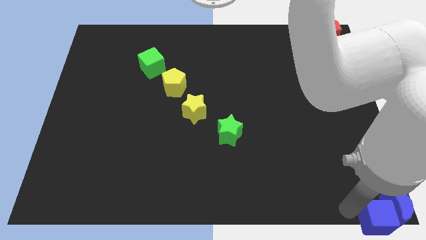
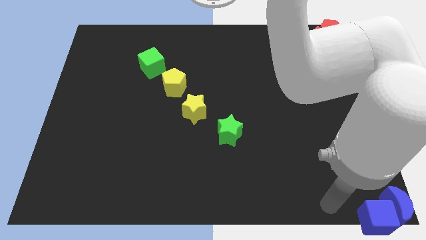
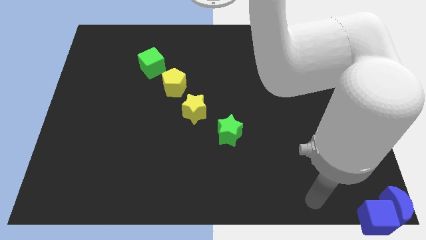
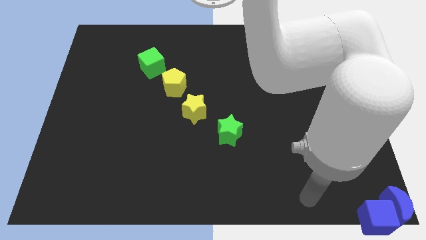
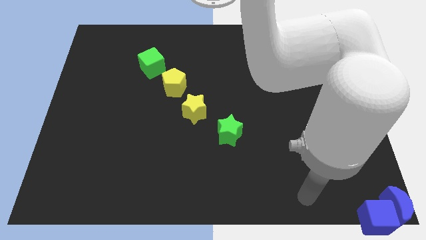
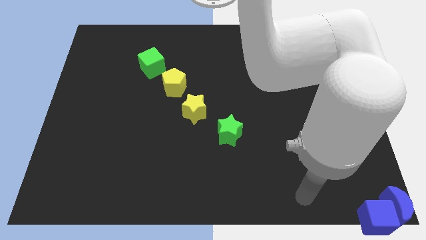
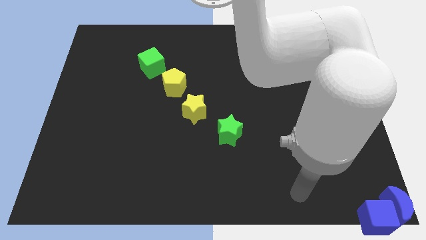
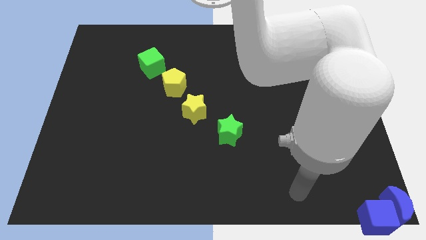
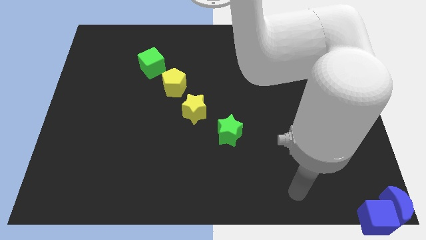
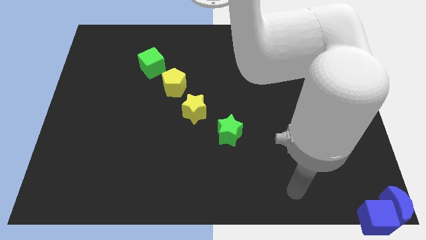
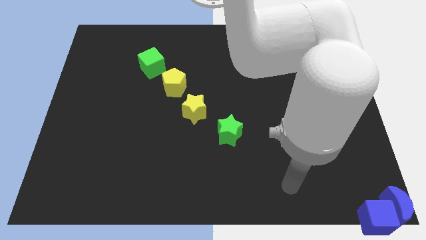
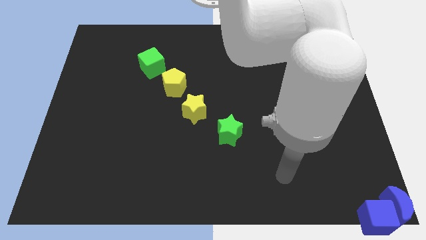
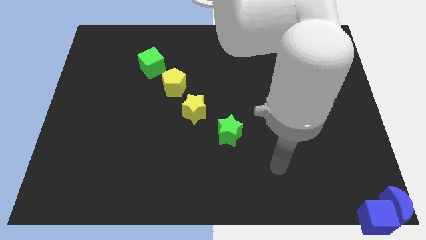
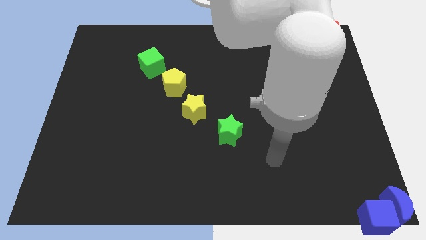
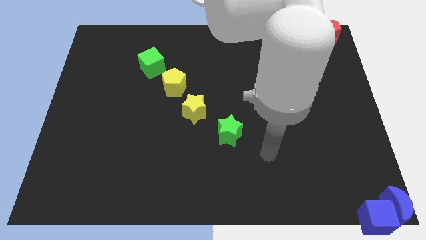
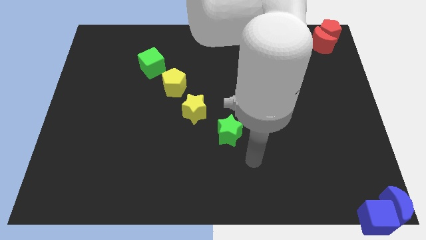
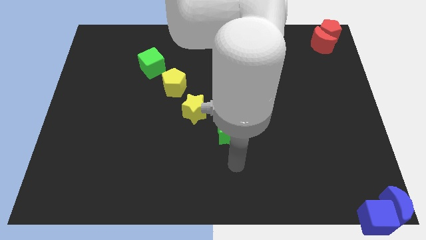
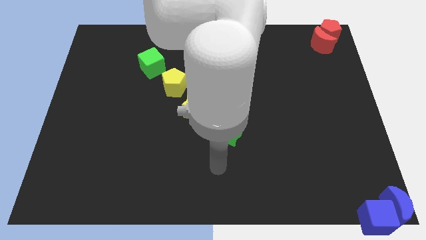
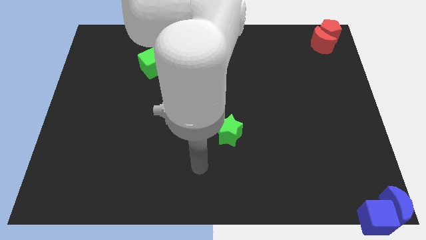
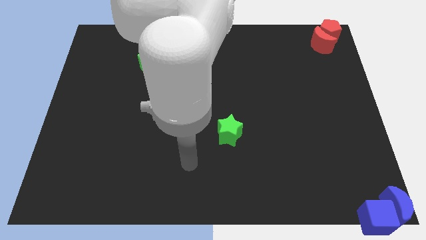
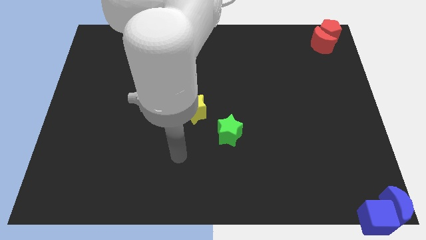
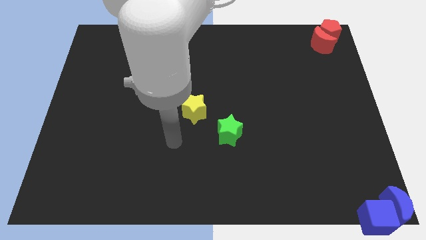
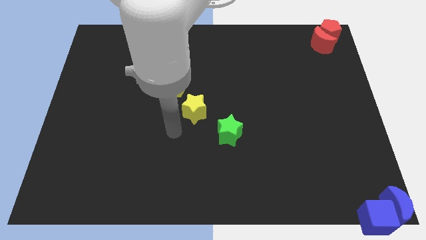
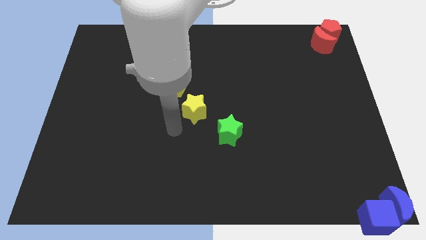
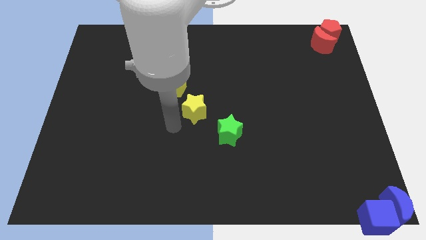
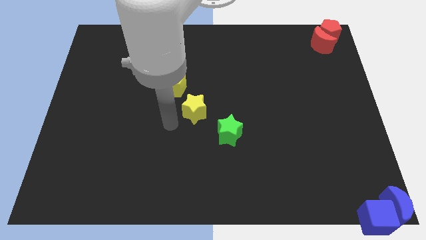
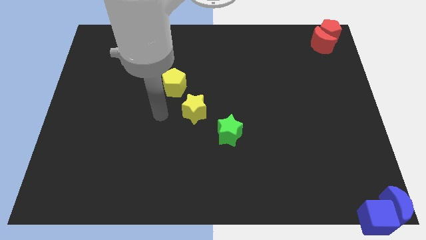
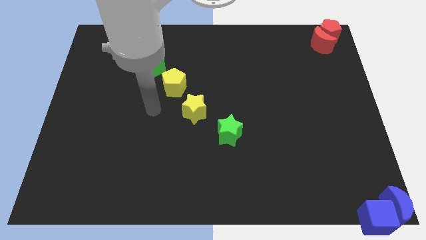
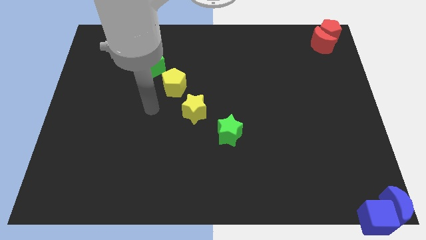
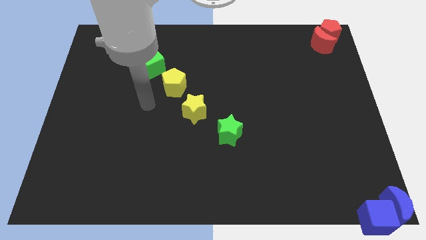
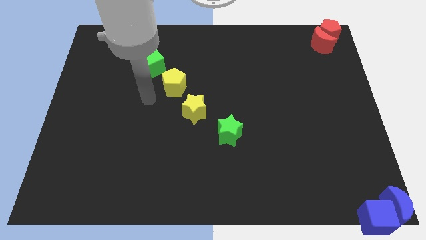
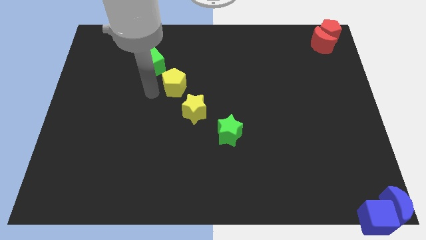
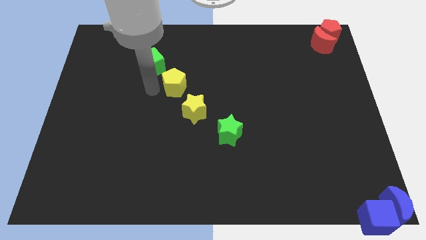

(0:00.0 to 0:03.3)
go away from the blue blocks

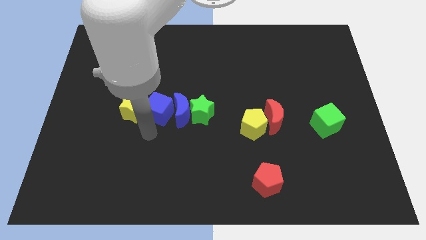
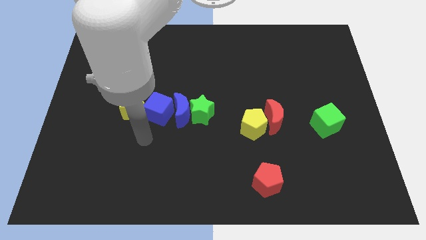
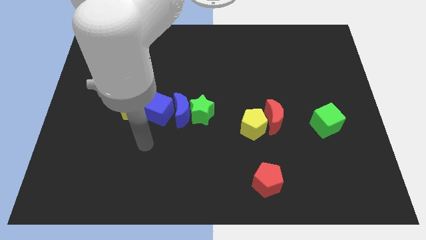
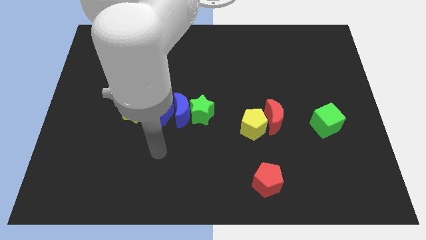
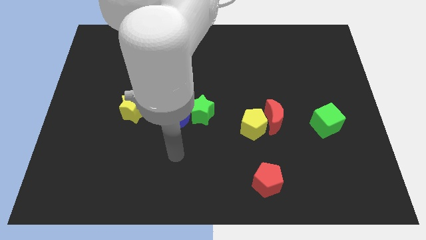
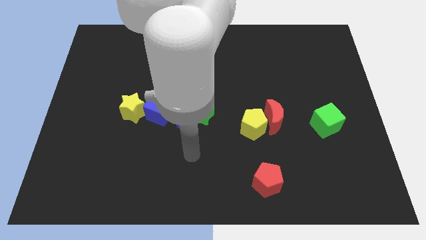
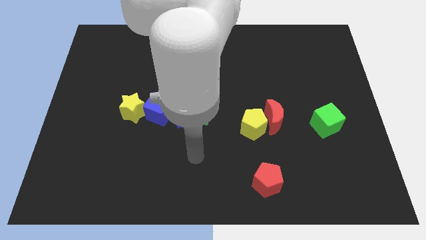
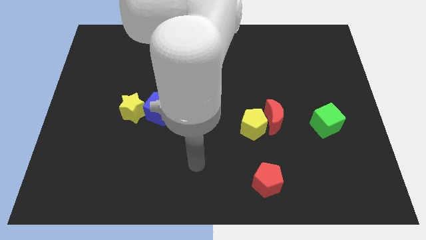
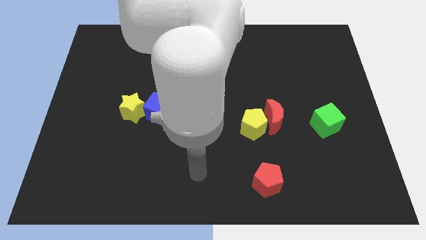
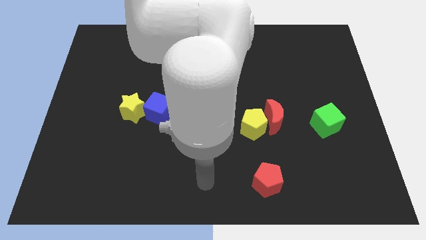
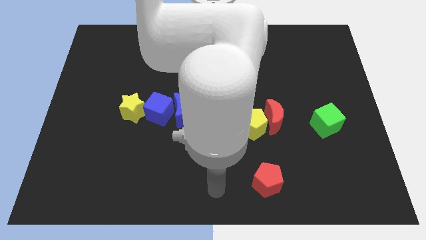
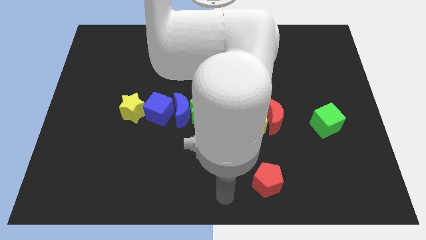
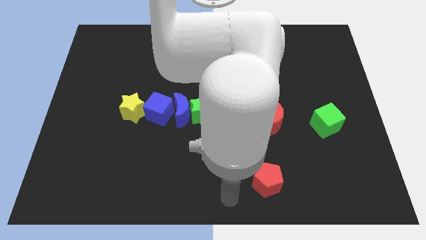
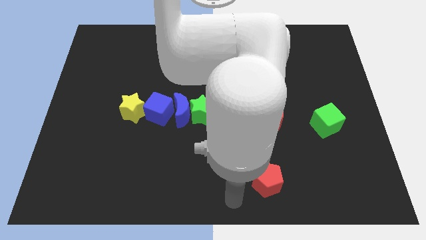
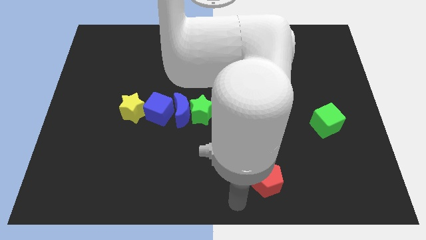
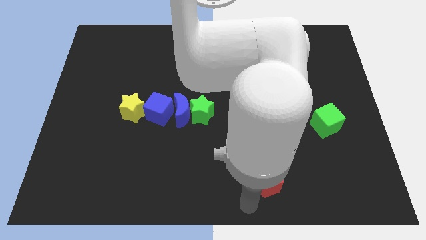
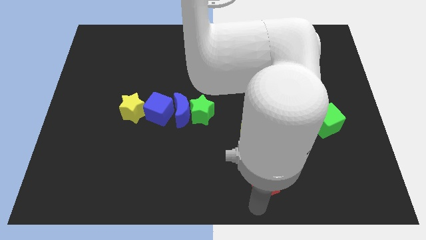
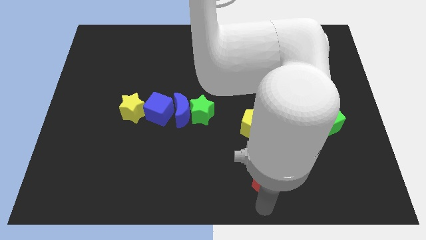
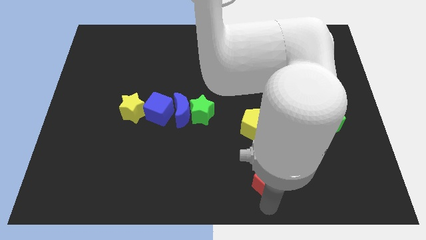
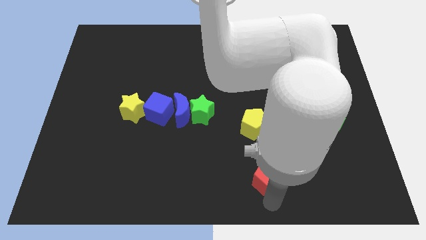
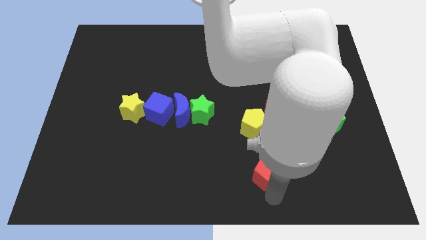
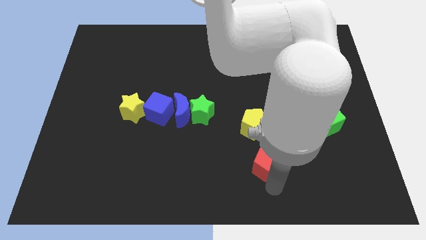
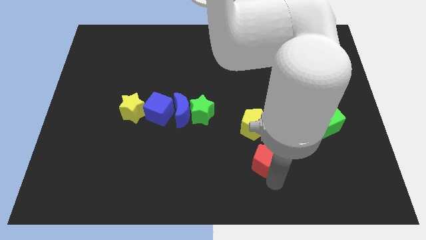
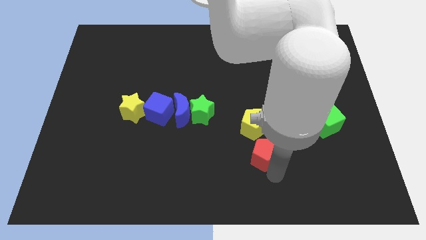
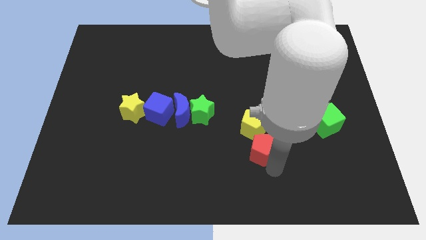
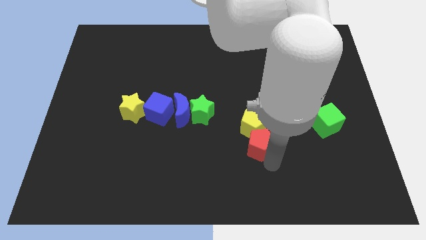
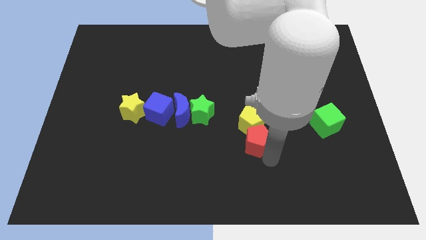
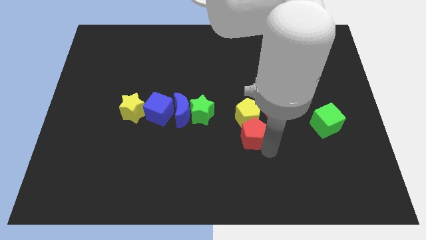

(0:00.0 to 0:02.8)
move the red pentagon into the yellow pentagon

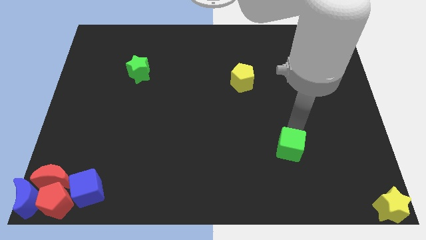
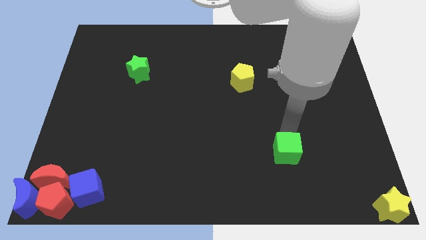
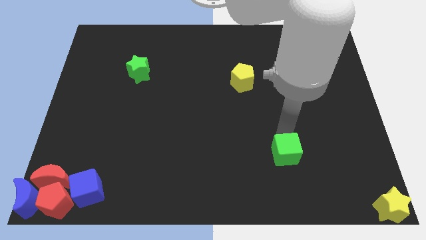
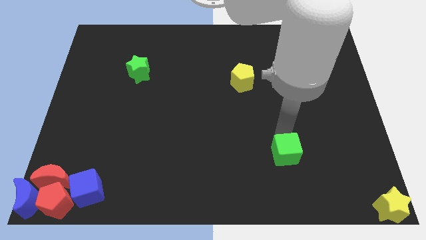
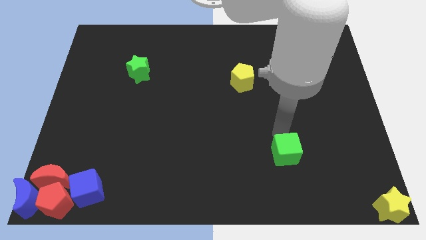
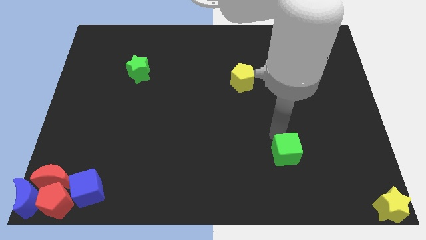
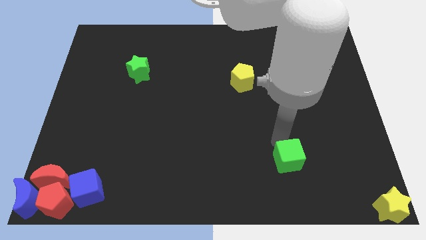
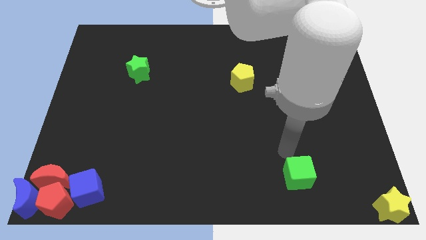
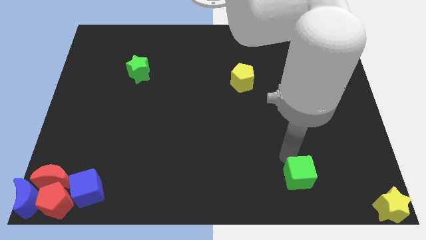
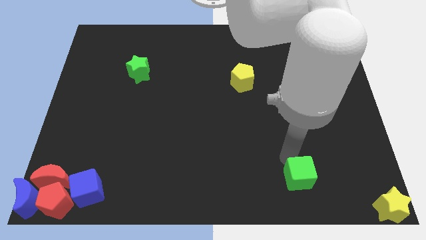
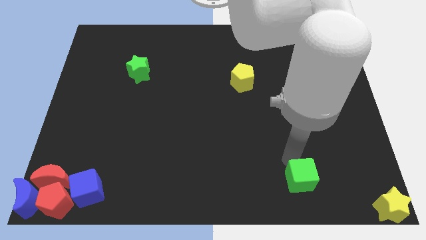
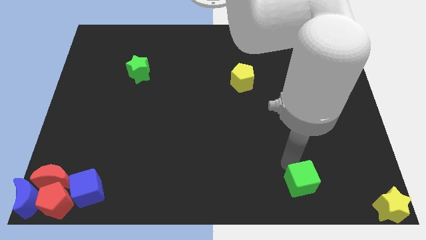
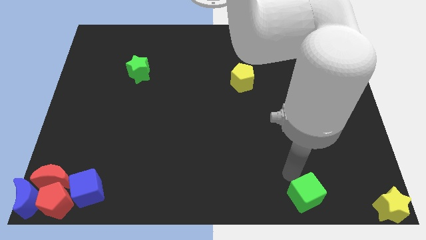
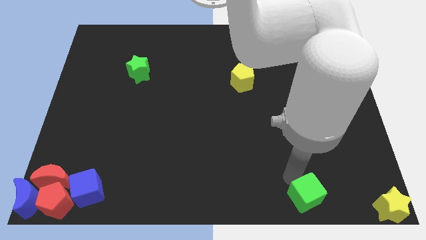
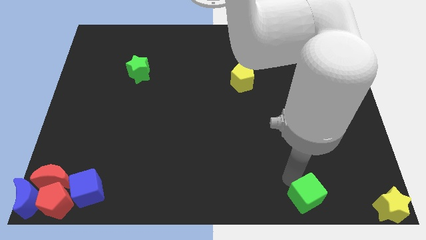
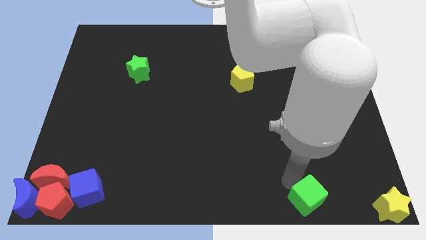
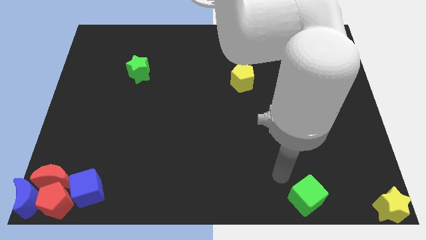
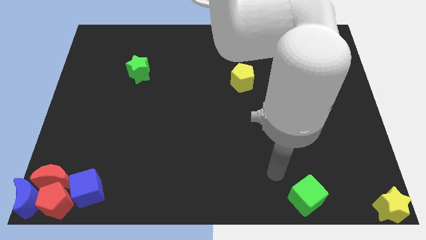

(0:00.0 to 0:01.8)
push the green cube towards the left side of the yellow star

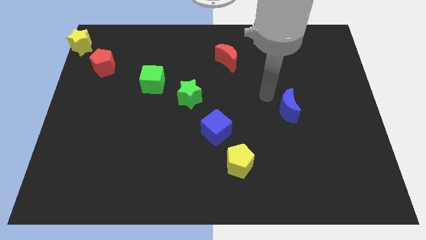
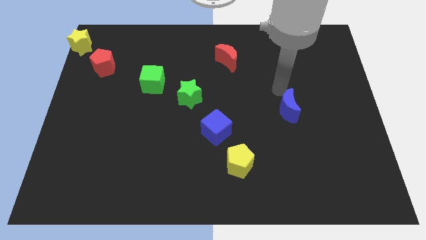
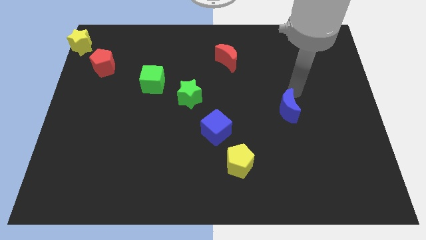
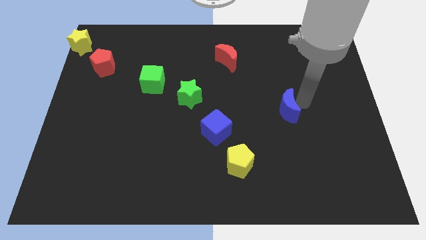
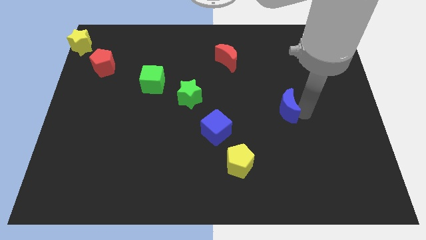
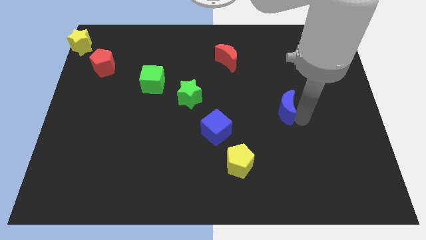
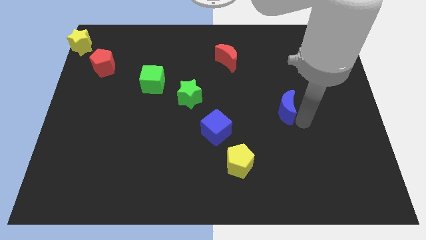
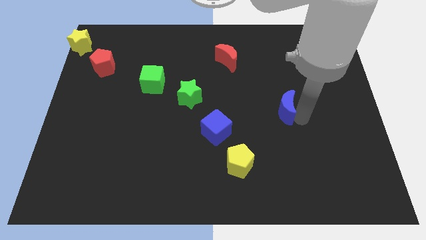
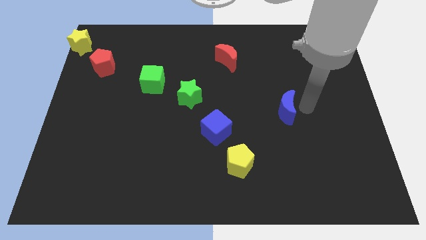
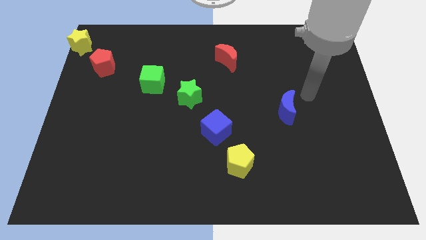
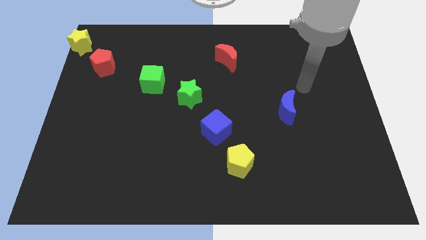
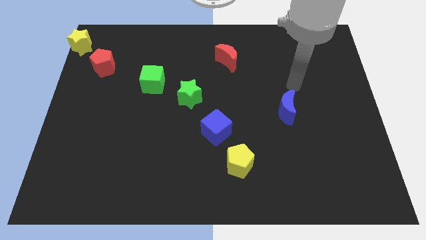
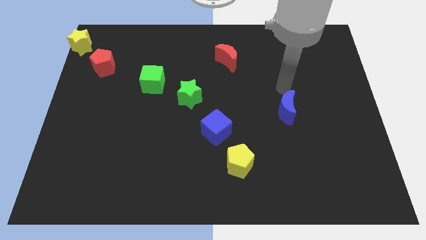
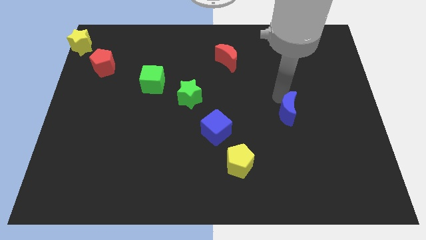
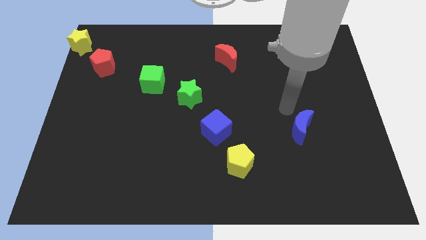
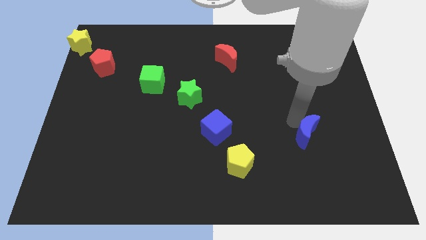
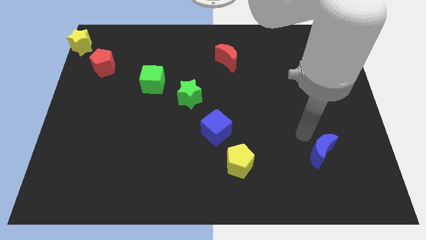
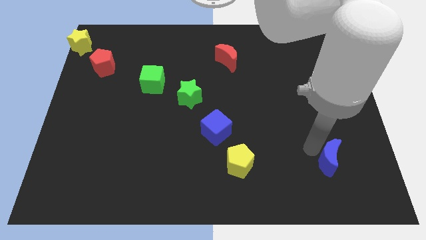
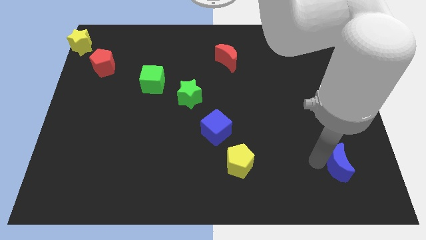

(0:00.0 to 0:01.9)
move the blue moon horizontally to the right side of the yellow pentagon
